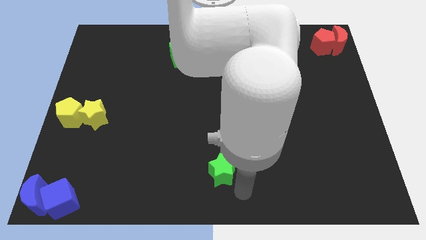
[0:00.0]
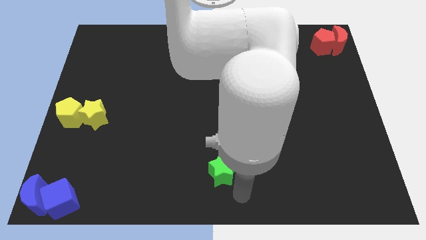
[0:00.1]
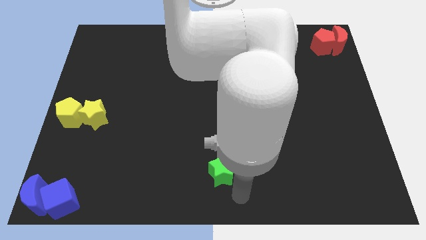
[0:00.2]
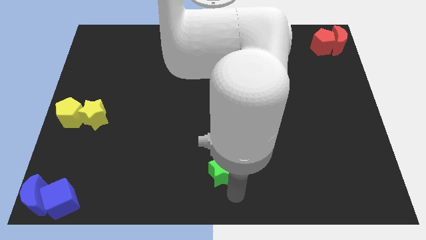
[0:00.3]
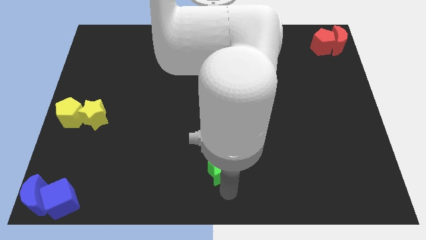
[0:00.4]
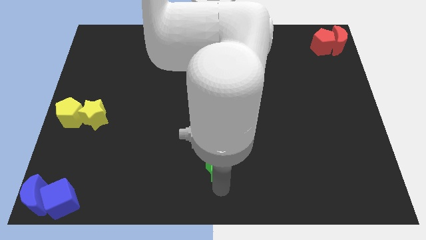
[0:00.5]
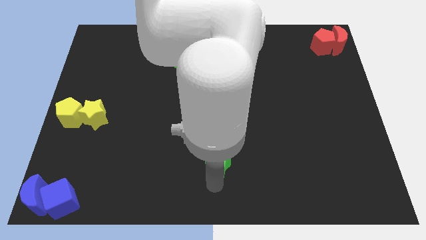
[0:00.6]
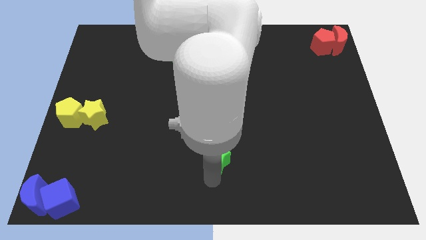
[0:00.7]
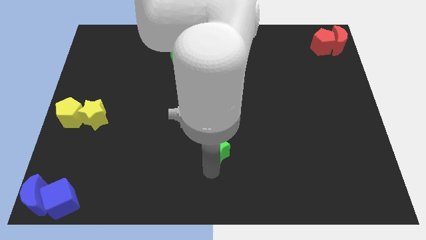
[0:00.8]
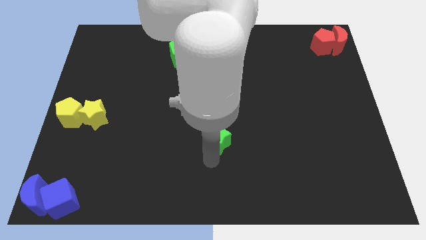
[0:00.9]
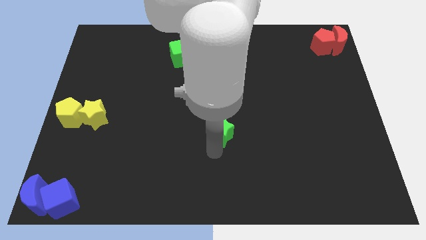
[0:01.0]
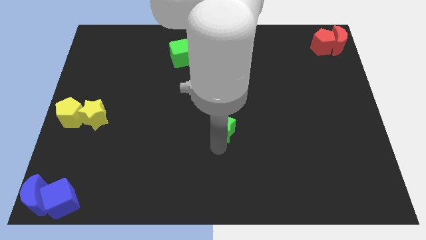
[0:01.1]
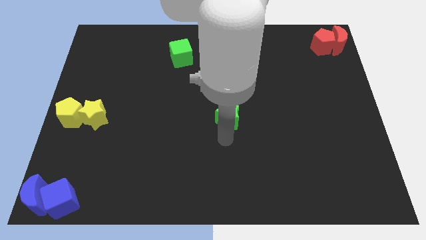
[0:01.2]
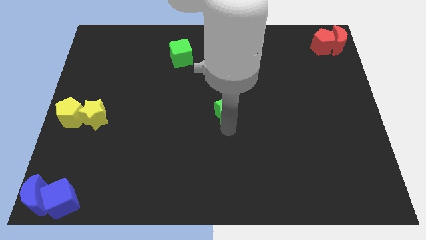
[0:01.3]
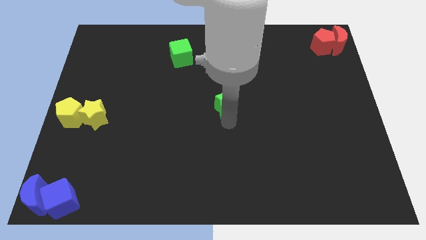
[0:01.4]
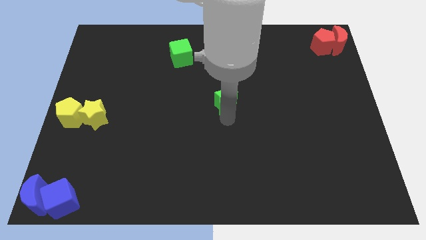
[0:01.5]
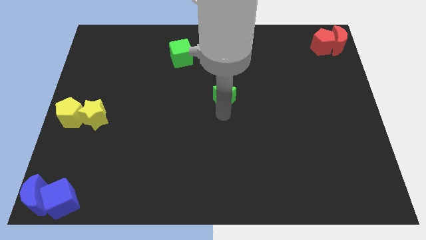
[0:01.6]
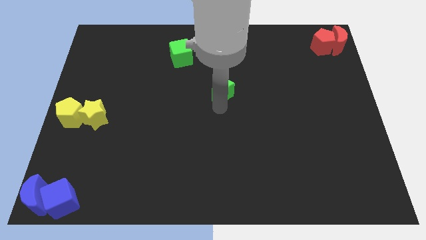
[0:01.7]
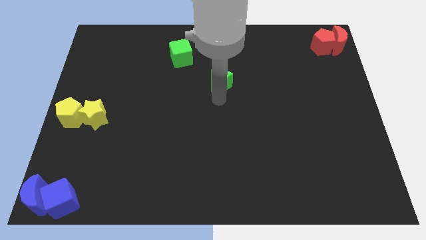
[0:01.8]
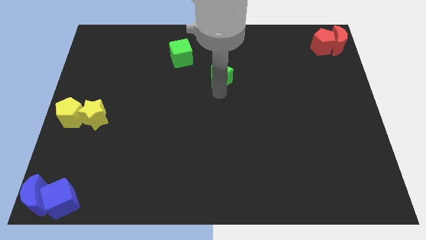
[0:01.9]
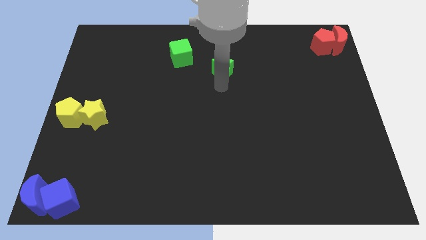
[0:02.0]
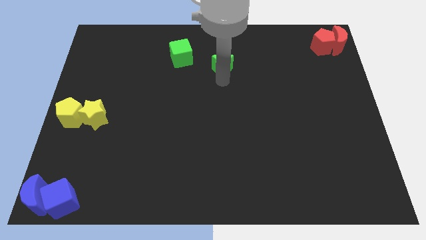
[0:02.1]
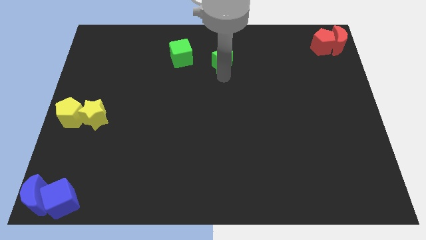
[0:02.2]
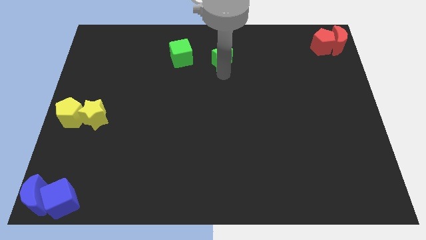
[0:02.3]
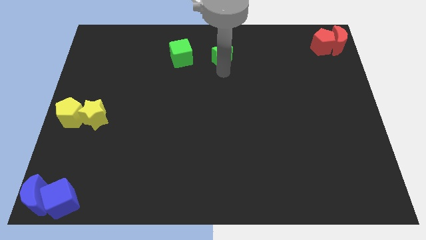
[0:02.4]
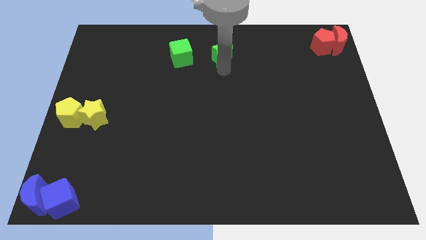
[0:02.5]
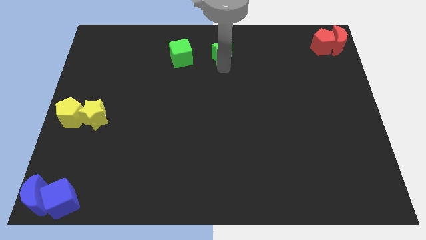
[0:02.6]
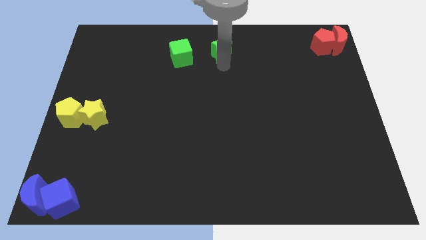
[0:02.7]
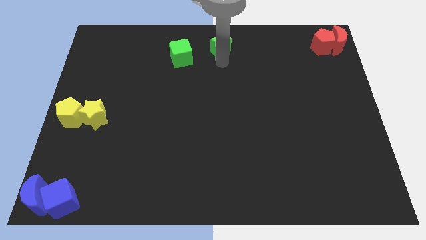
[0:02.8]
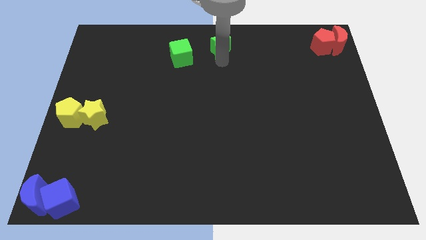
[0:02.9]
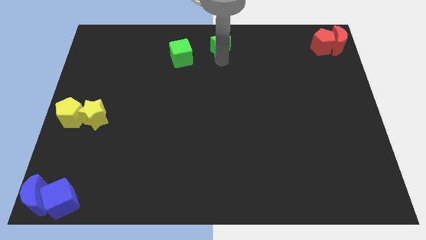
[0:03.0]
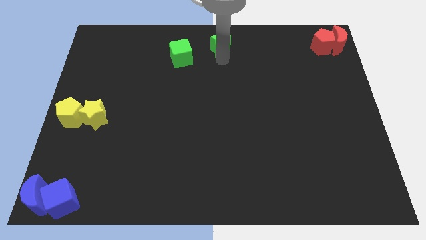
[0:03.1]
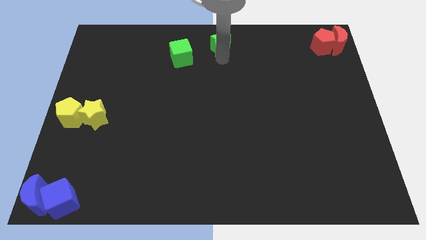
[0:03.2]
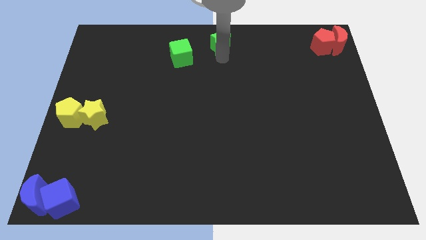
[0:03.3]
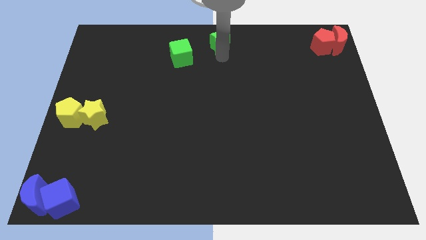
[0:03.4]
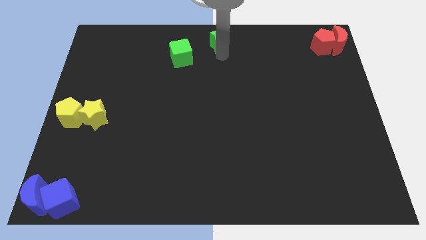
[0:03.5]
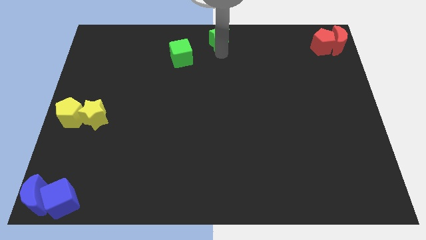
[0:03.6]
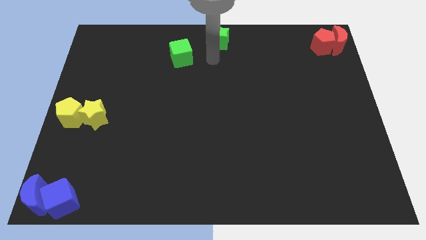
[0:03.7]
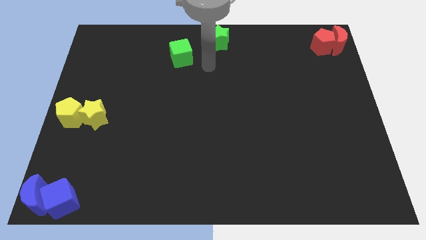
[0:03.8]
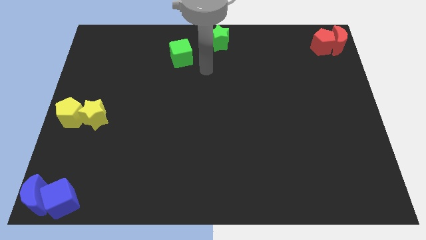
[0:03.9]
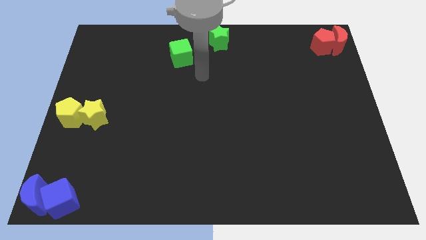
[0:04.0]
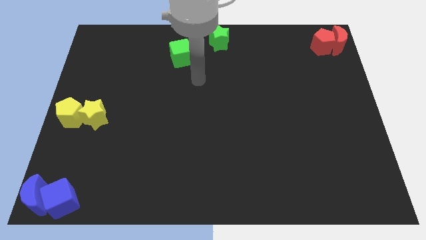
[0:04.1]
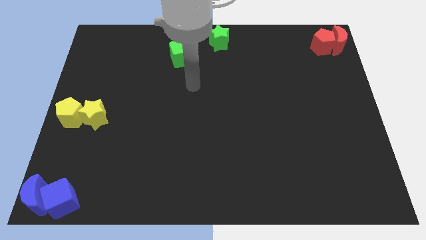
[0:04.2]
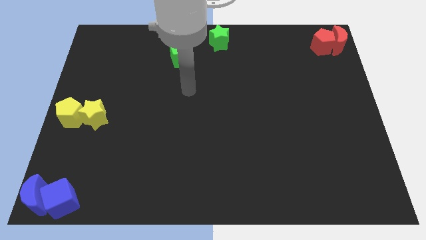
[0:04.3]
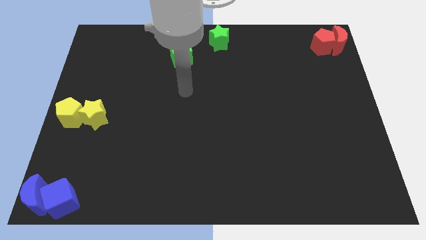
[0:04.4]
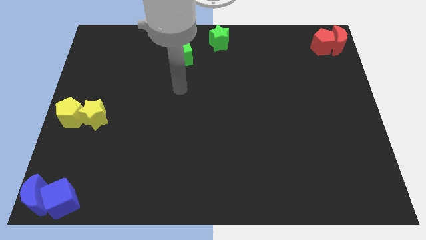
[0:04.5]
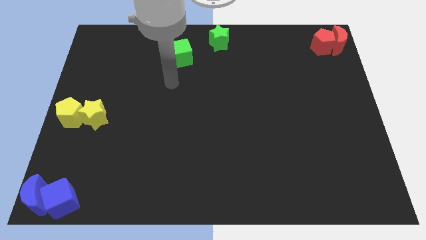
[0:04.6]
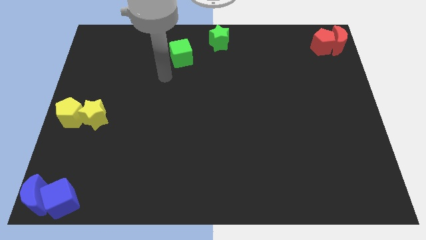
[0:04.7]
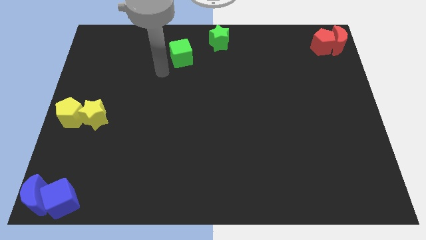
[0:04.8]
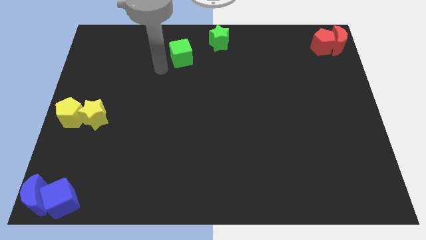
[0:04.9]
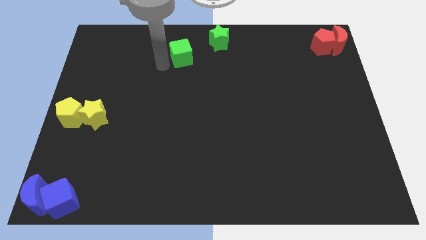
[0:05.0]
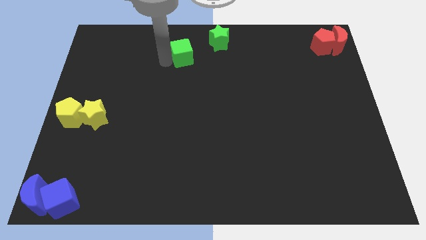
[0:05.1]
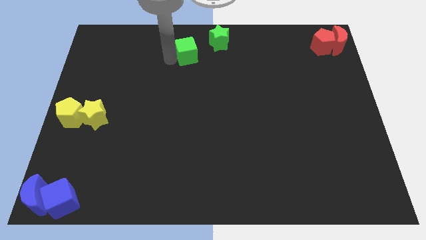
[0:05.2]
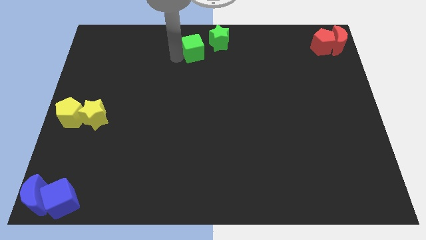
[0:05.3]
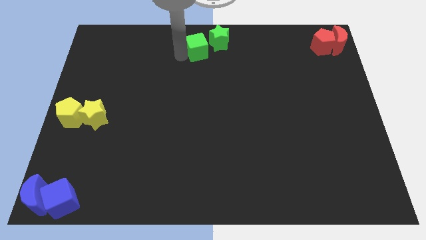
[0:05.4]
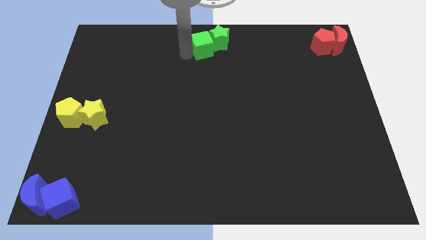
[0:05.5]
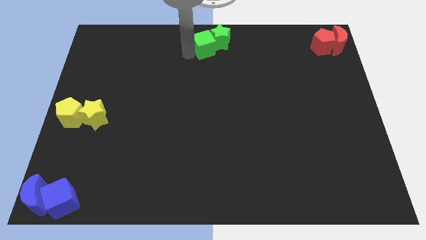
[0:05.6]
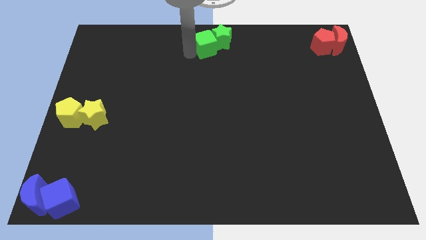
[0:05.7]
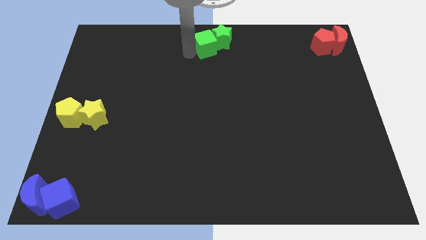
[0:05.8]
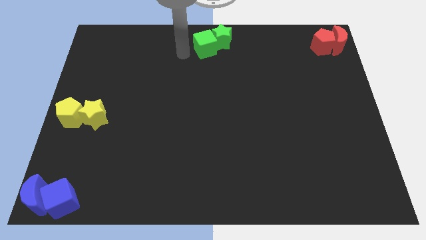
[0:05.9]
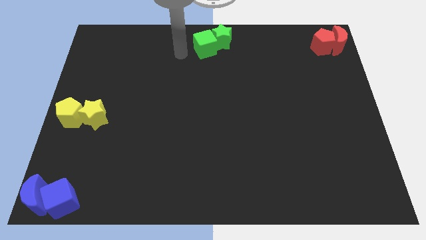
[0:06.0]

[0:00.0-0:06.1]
place the green star at the top center of the board

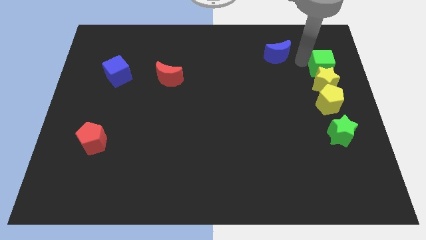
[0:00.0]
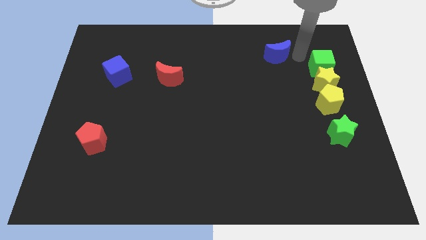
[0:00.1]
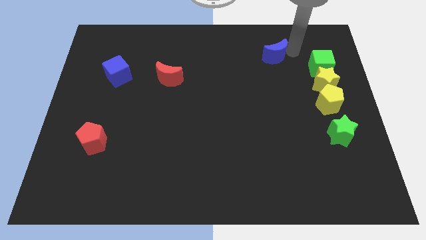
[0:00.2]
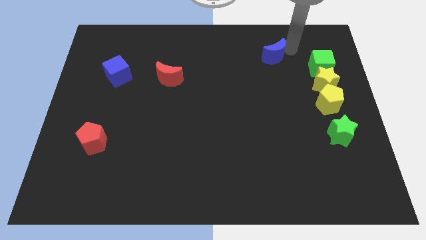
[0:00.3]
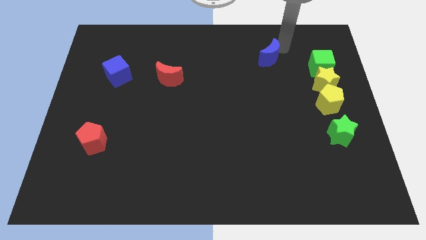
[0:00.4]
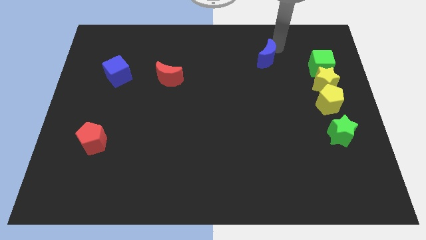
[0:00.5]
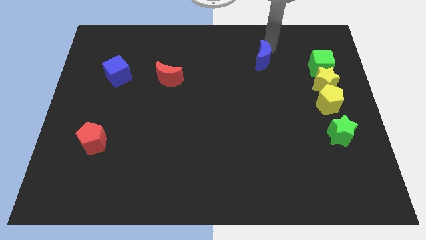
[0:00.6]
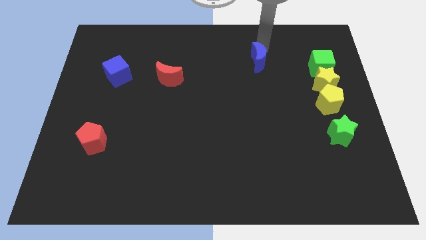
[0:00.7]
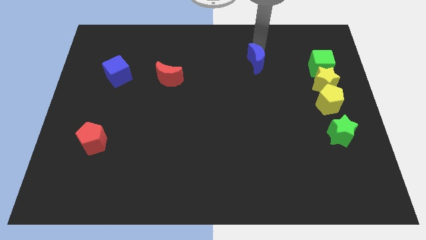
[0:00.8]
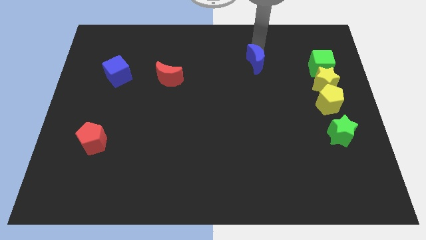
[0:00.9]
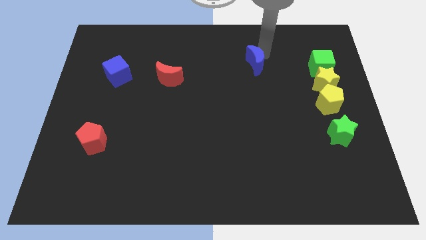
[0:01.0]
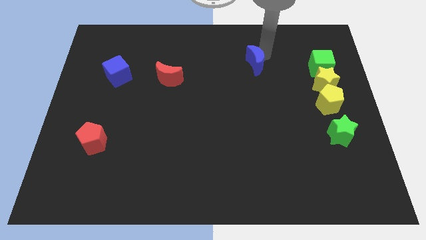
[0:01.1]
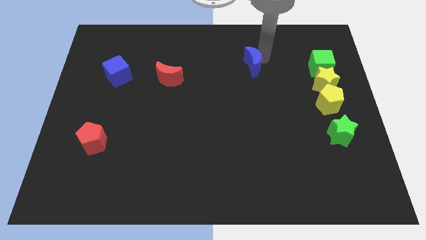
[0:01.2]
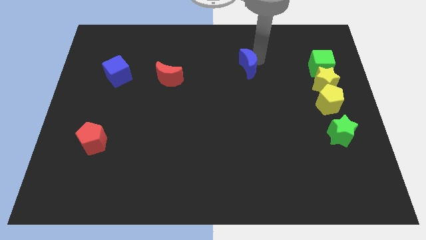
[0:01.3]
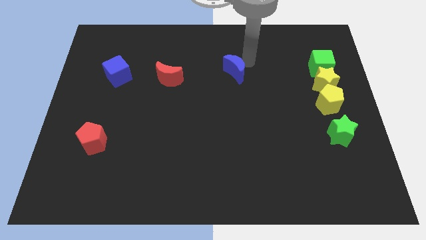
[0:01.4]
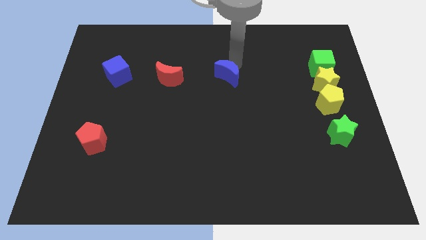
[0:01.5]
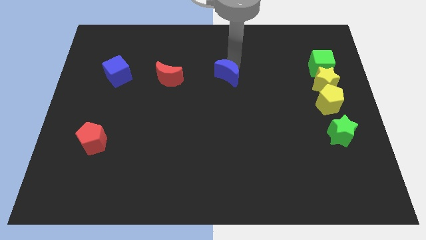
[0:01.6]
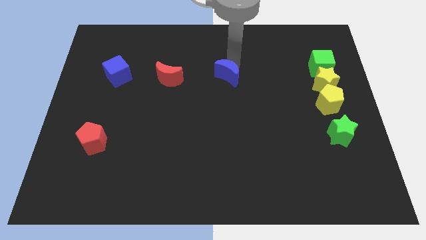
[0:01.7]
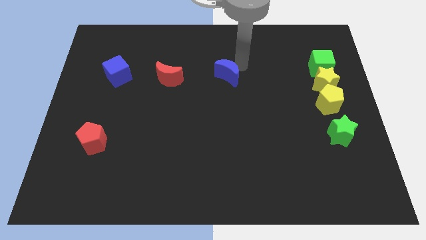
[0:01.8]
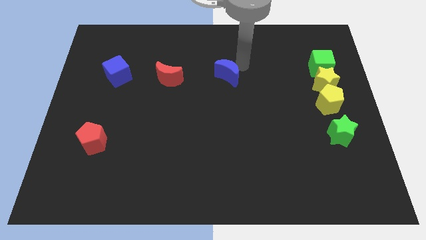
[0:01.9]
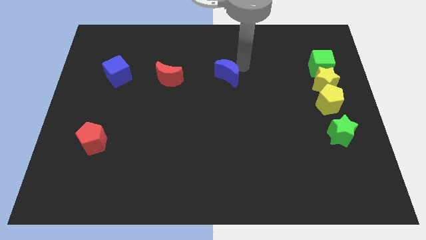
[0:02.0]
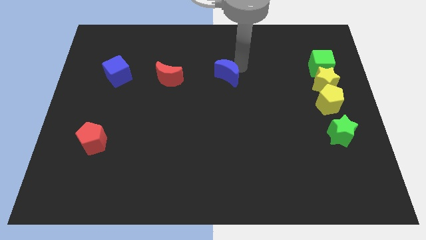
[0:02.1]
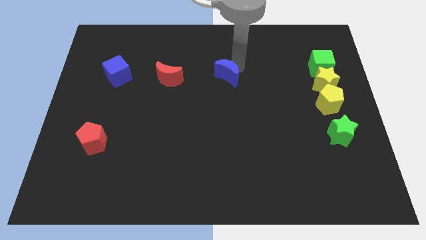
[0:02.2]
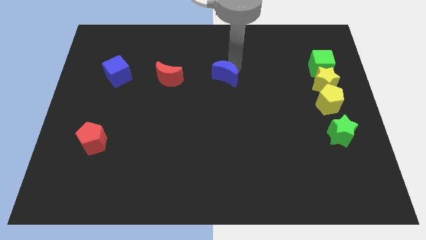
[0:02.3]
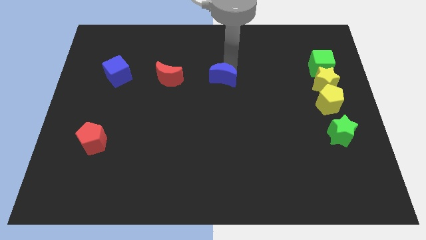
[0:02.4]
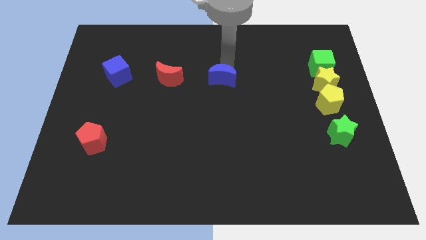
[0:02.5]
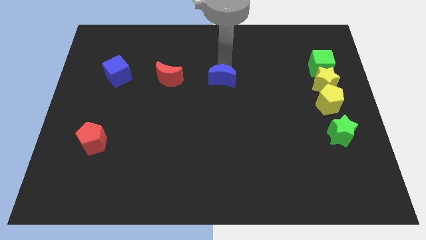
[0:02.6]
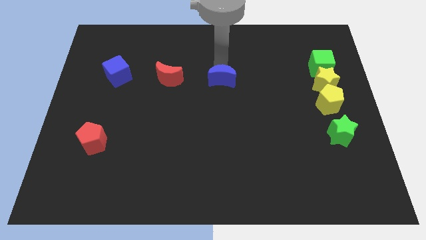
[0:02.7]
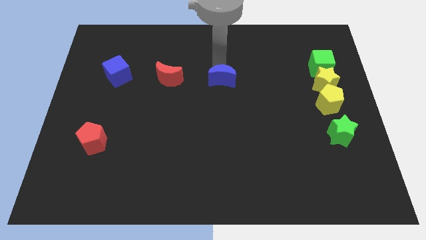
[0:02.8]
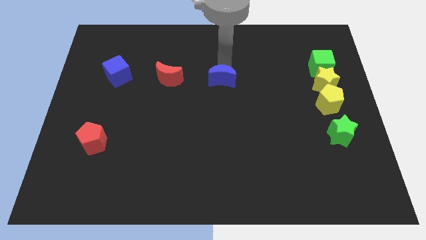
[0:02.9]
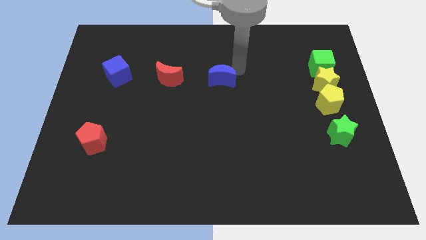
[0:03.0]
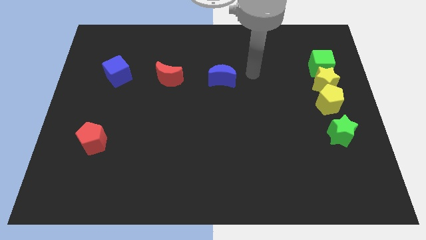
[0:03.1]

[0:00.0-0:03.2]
push blue crescent
